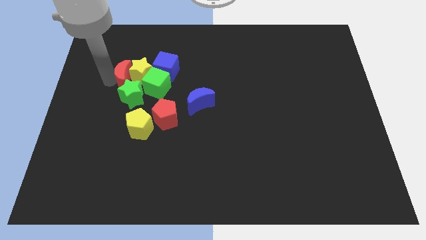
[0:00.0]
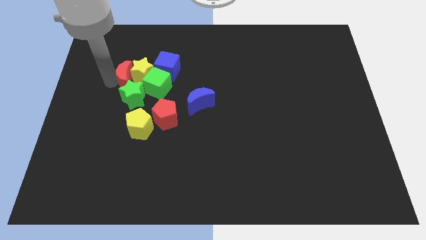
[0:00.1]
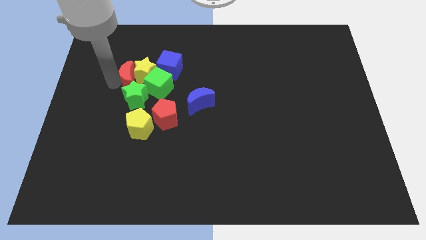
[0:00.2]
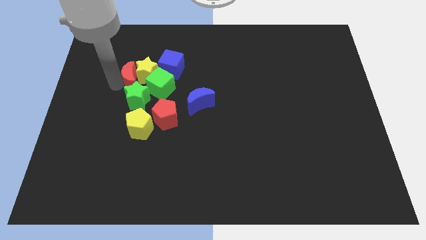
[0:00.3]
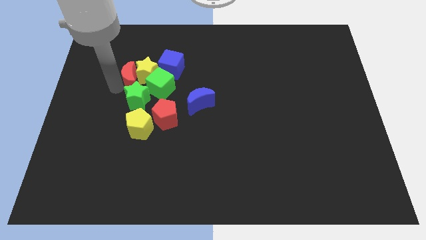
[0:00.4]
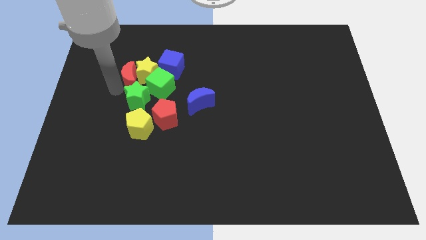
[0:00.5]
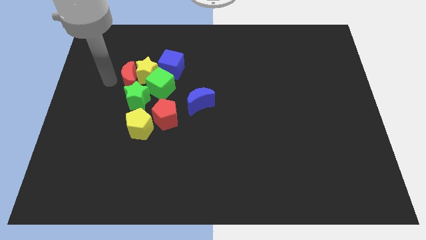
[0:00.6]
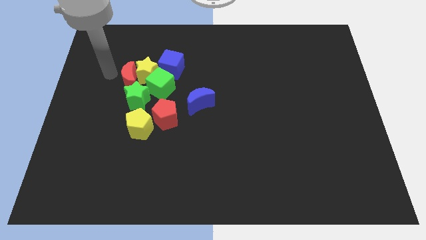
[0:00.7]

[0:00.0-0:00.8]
slightly disturb all the blocks using red pentagon

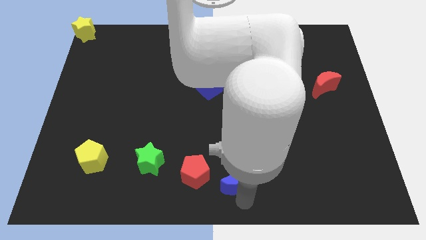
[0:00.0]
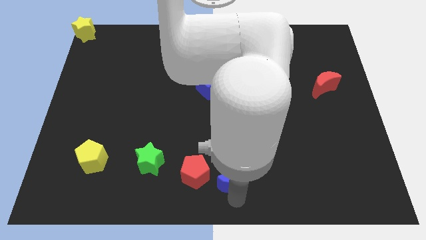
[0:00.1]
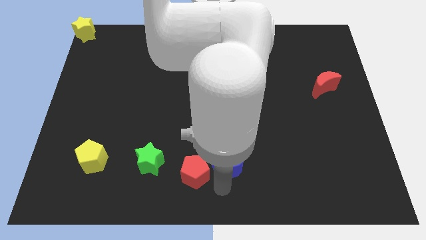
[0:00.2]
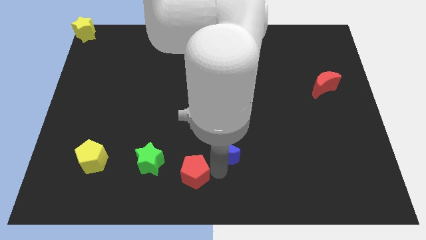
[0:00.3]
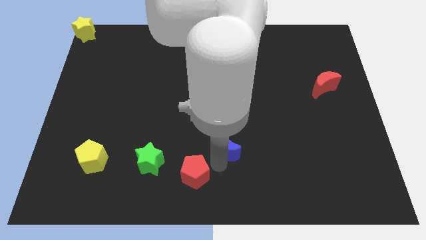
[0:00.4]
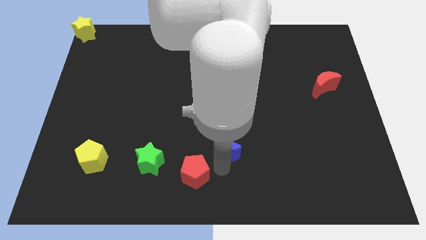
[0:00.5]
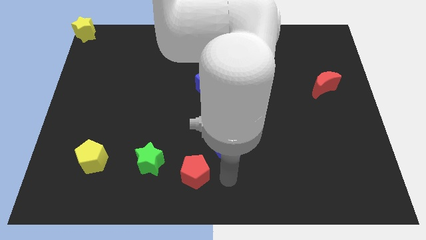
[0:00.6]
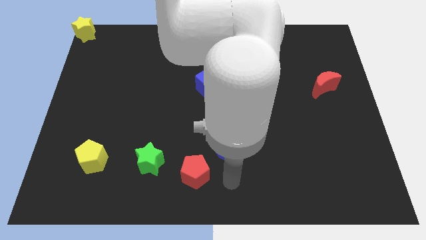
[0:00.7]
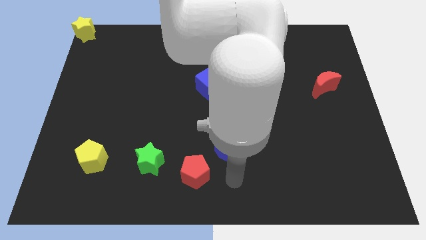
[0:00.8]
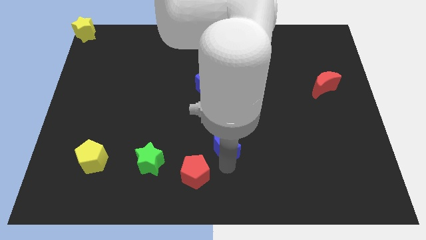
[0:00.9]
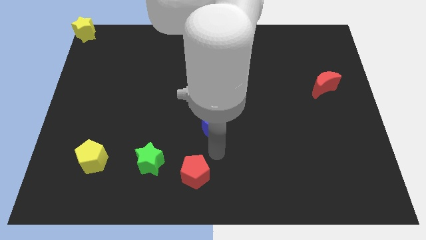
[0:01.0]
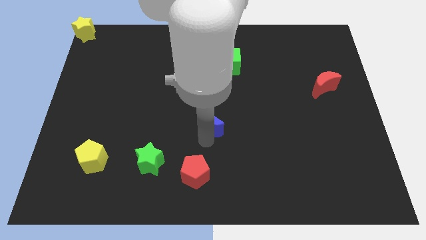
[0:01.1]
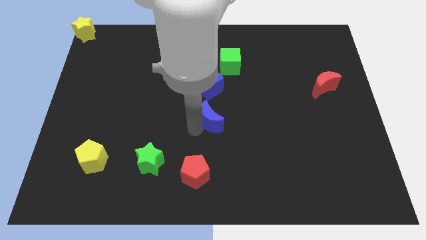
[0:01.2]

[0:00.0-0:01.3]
place the blue moon in between the red pentagon and blue cube

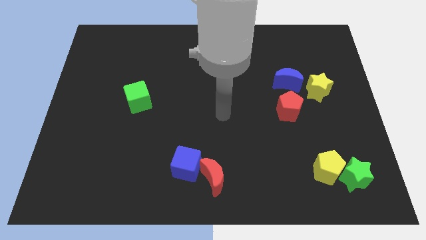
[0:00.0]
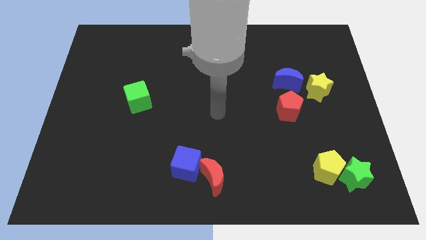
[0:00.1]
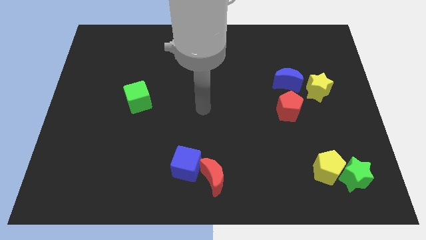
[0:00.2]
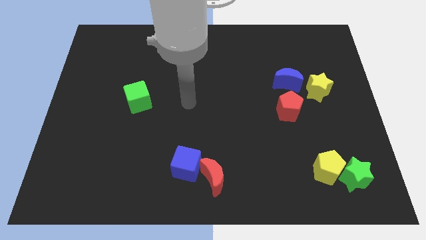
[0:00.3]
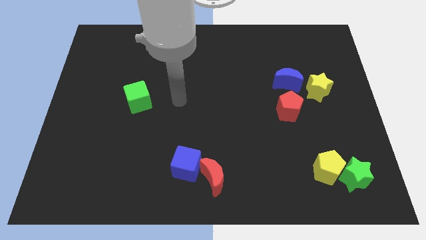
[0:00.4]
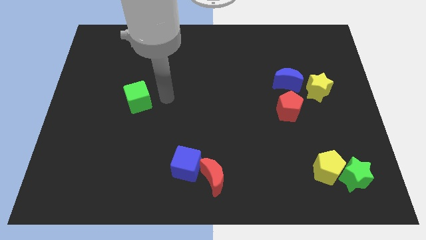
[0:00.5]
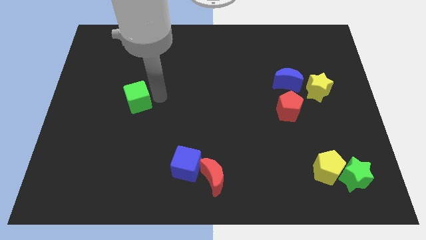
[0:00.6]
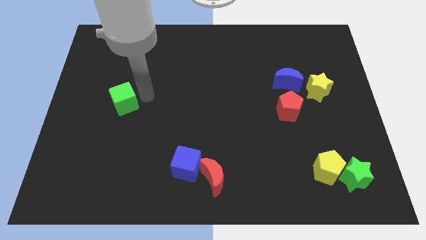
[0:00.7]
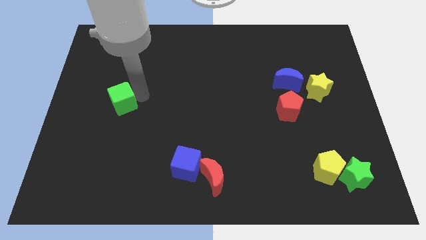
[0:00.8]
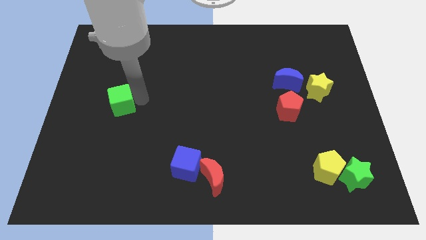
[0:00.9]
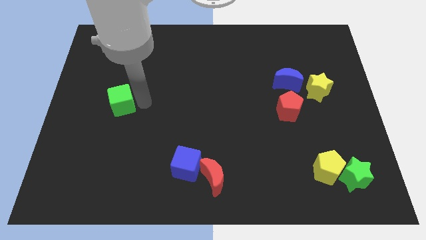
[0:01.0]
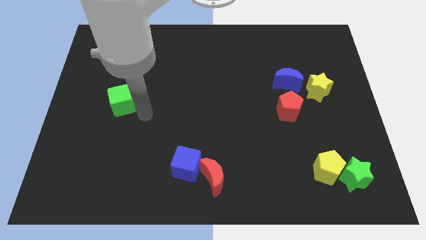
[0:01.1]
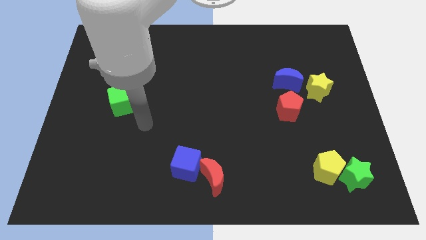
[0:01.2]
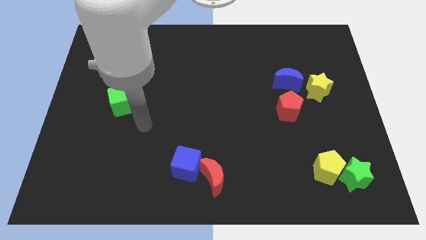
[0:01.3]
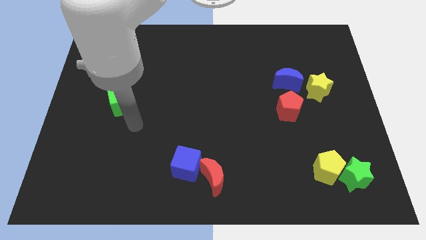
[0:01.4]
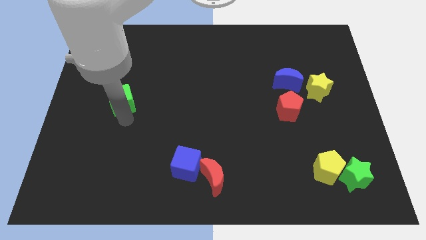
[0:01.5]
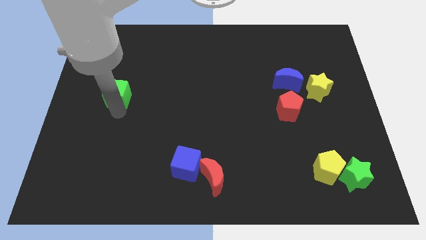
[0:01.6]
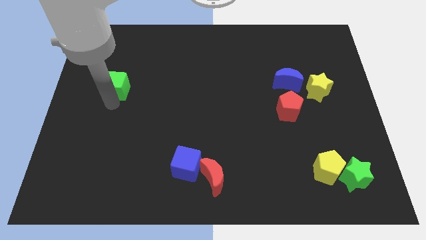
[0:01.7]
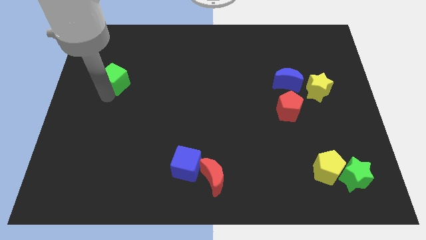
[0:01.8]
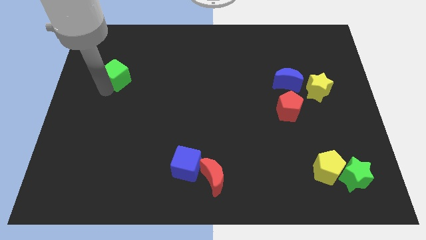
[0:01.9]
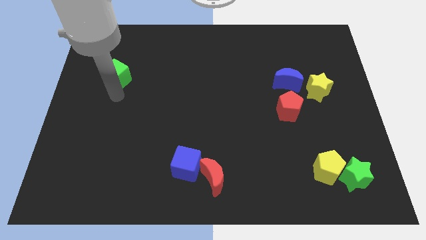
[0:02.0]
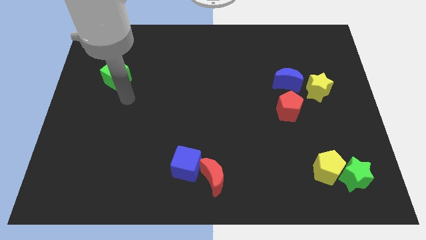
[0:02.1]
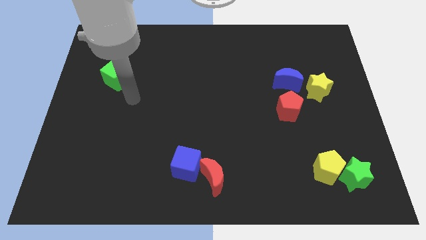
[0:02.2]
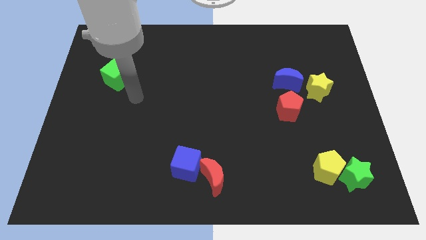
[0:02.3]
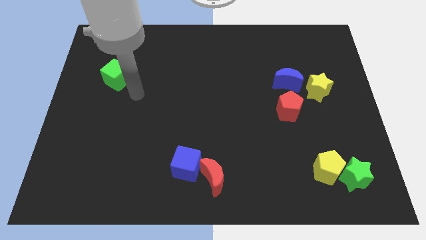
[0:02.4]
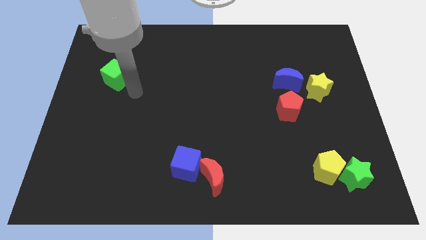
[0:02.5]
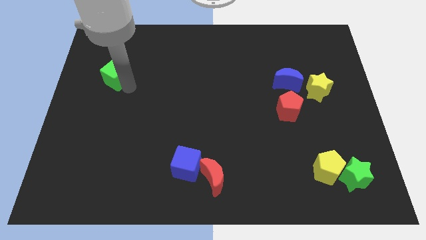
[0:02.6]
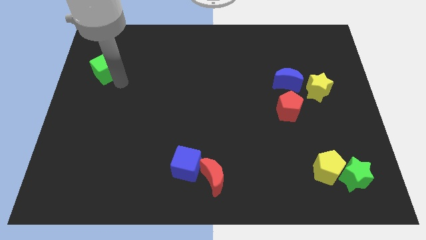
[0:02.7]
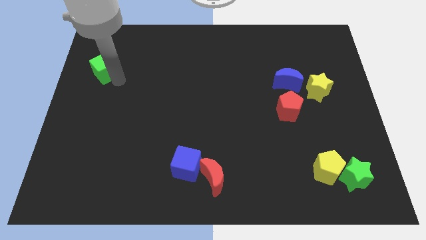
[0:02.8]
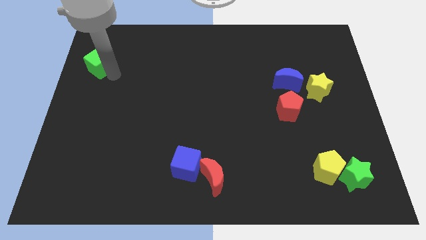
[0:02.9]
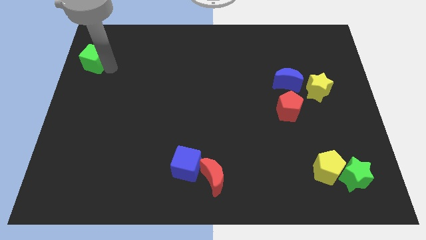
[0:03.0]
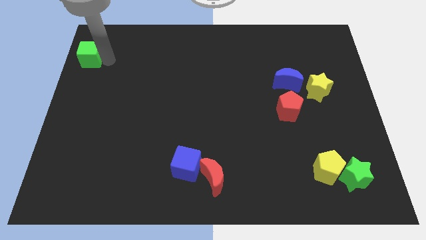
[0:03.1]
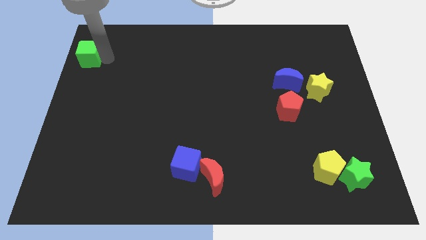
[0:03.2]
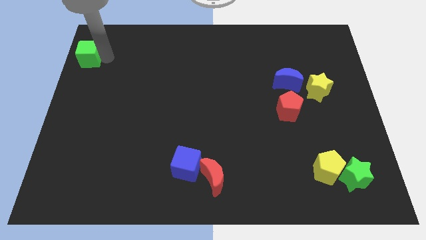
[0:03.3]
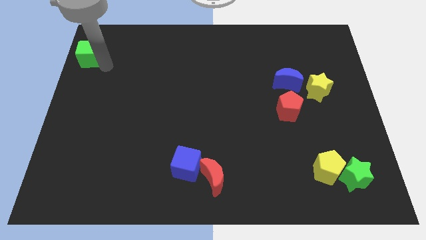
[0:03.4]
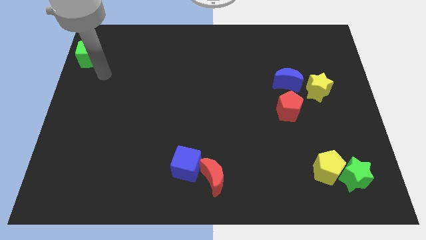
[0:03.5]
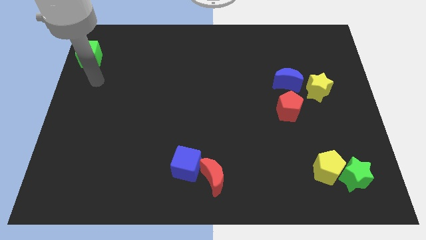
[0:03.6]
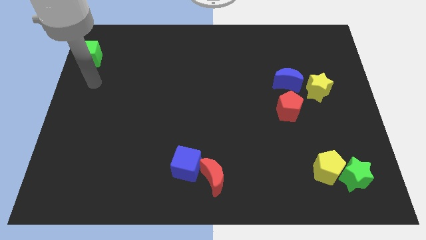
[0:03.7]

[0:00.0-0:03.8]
move the green cube towards the top left corner

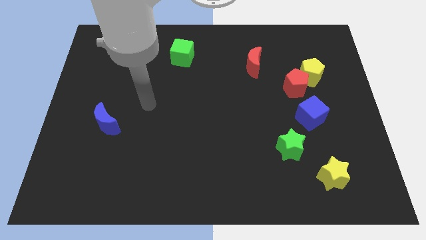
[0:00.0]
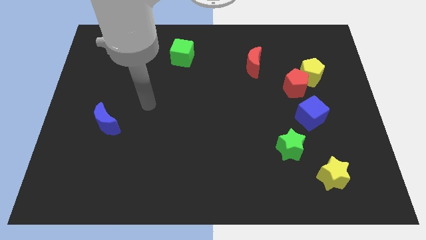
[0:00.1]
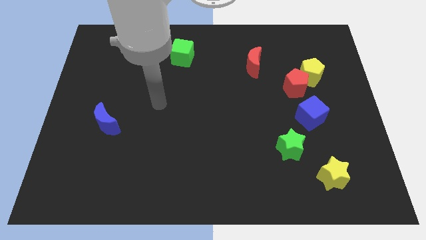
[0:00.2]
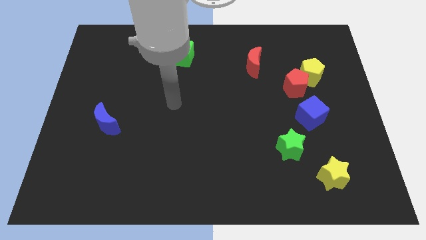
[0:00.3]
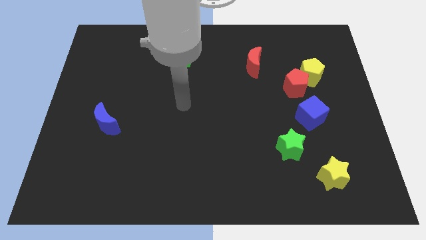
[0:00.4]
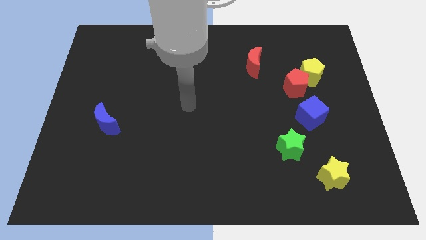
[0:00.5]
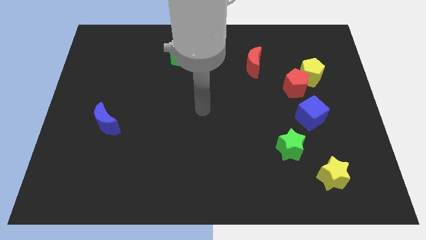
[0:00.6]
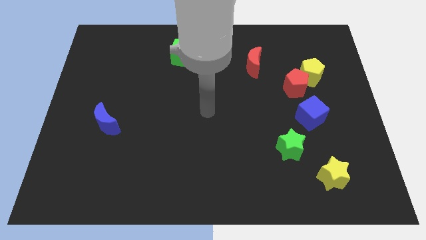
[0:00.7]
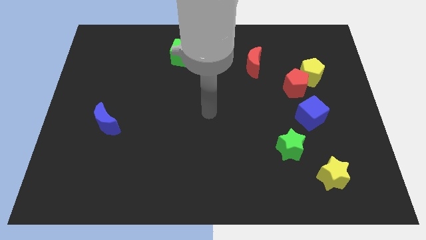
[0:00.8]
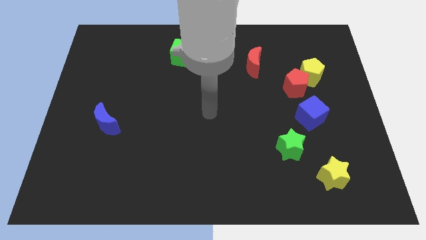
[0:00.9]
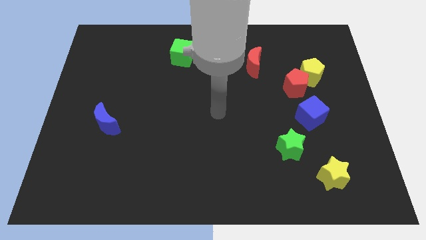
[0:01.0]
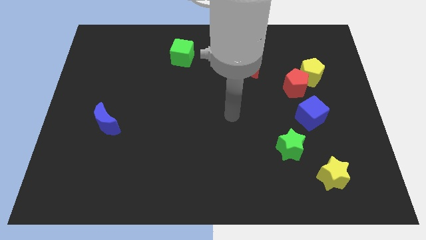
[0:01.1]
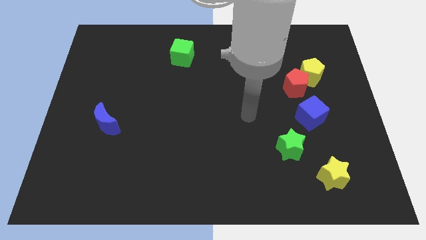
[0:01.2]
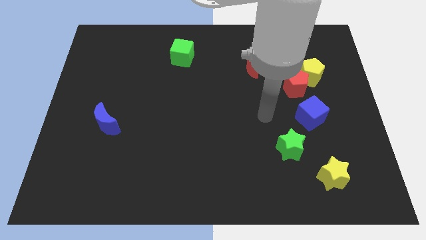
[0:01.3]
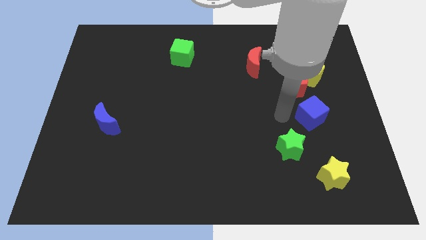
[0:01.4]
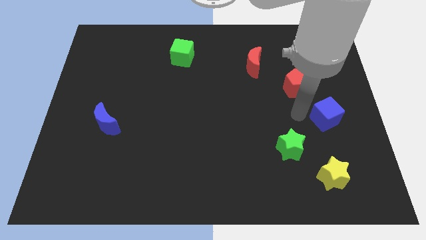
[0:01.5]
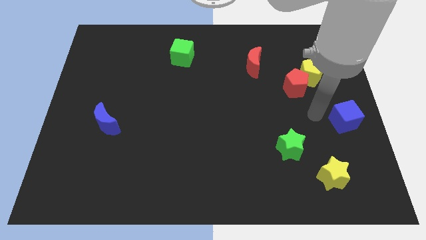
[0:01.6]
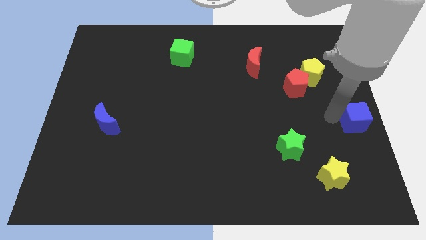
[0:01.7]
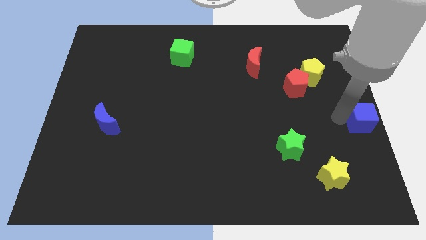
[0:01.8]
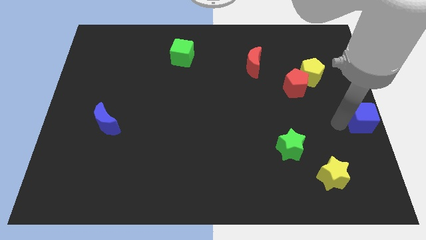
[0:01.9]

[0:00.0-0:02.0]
slide the blue cube diagonally top right to the yellow star

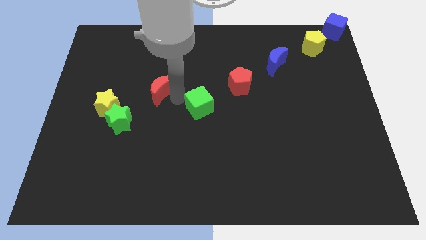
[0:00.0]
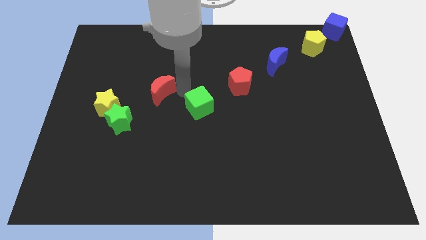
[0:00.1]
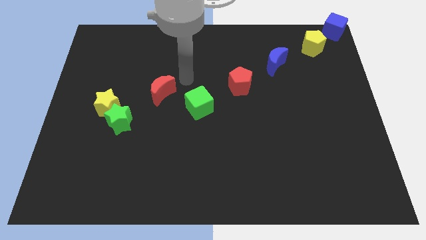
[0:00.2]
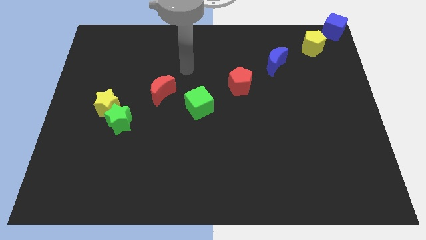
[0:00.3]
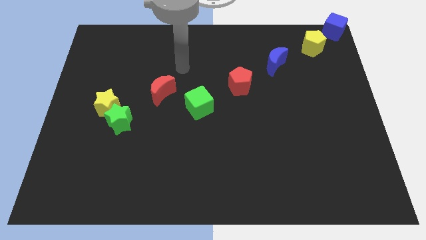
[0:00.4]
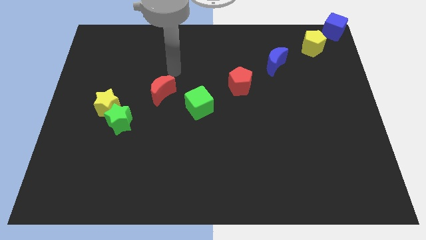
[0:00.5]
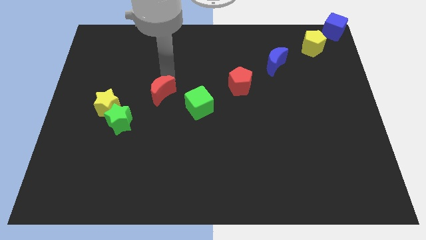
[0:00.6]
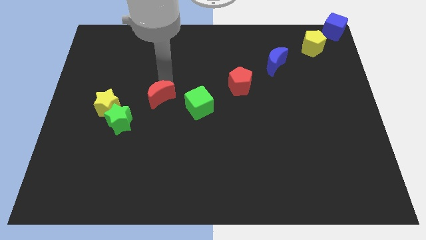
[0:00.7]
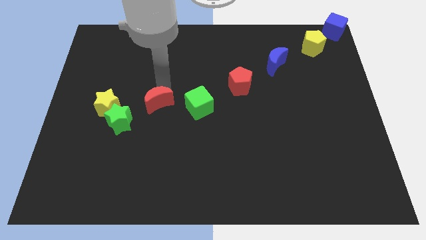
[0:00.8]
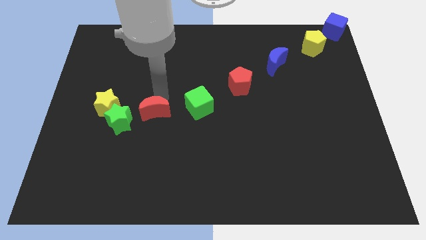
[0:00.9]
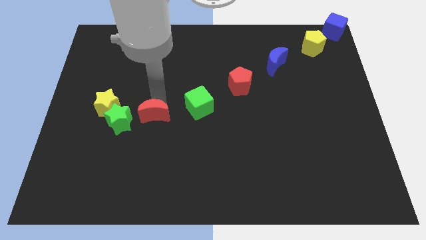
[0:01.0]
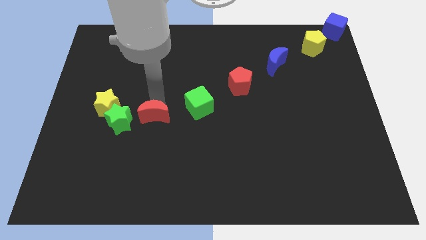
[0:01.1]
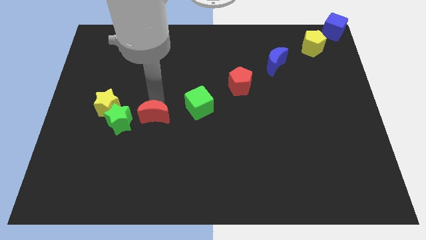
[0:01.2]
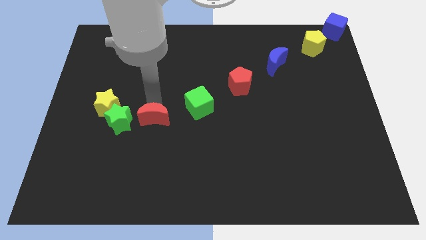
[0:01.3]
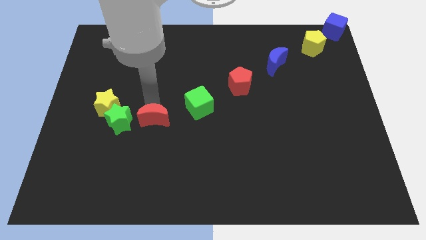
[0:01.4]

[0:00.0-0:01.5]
place the red moon in between the green star and green cube
